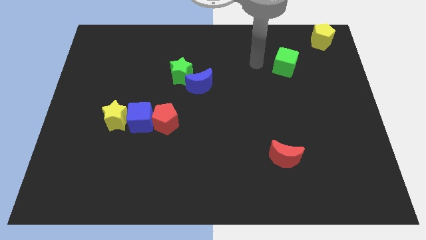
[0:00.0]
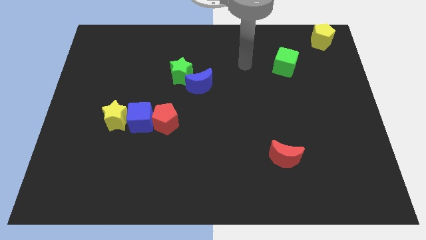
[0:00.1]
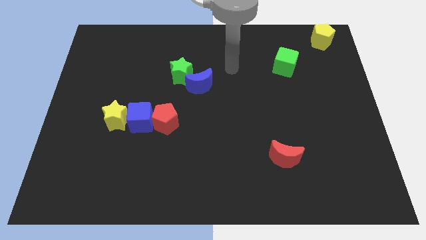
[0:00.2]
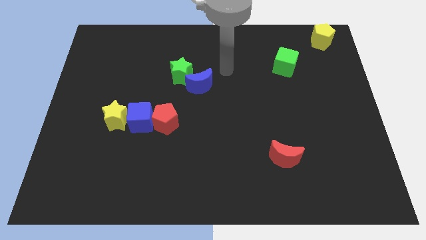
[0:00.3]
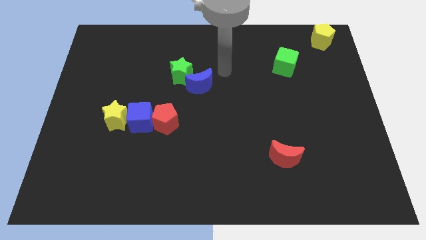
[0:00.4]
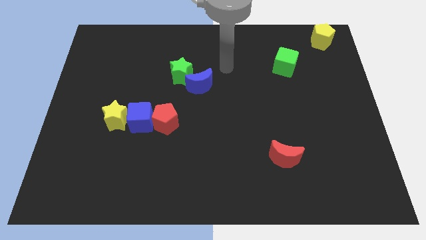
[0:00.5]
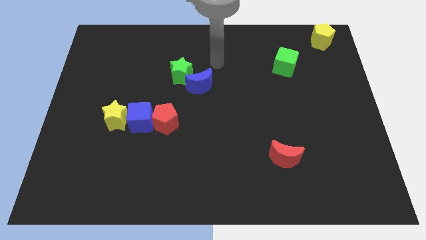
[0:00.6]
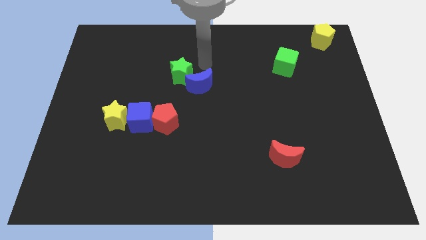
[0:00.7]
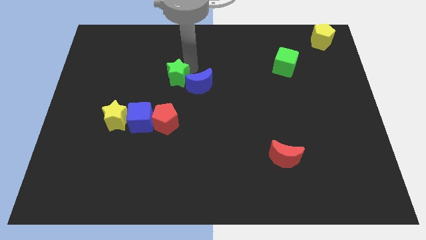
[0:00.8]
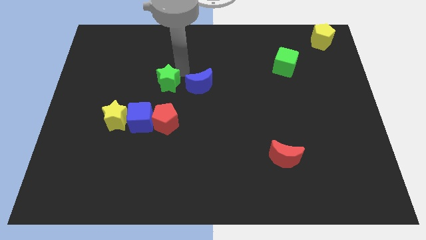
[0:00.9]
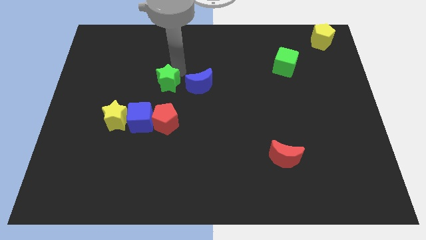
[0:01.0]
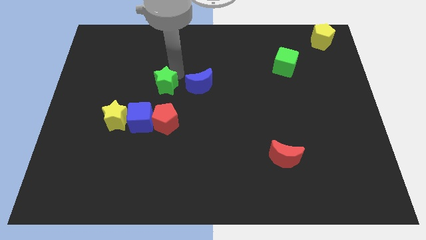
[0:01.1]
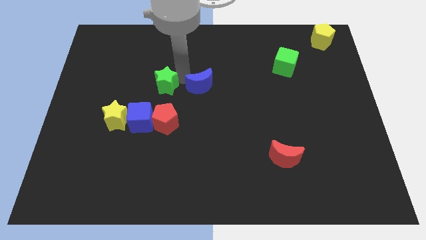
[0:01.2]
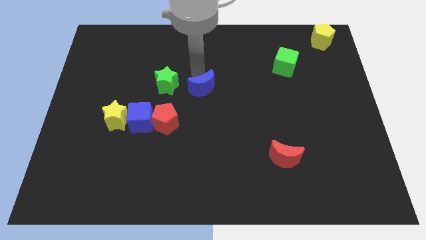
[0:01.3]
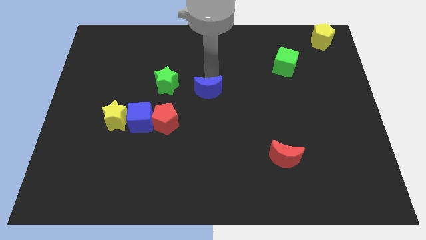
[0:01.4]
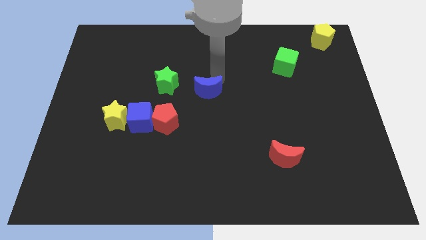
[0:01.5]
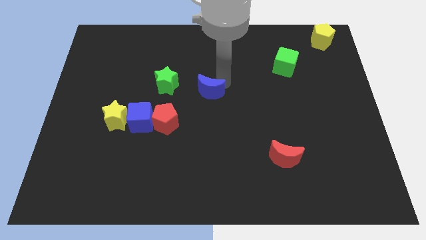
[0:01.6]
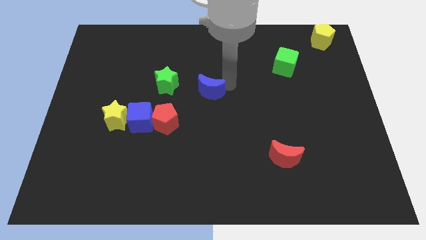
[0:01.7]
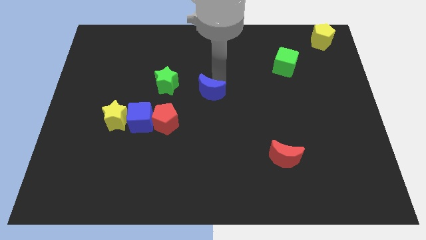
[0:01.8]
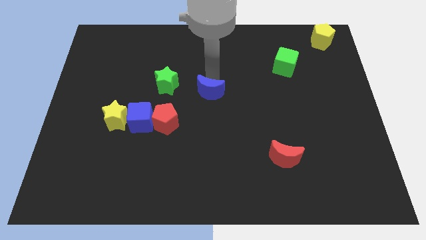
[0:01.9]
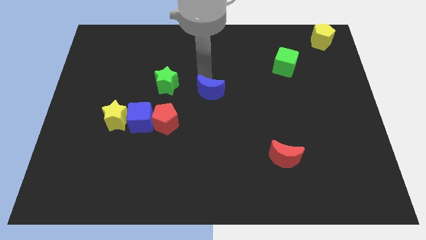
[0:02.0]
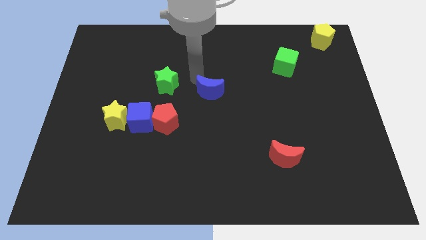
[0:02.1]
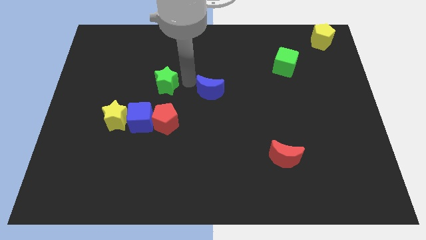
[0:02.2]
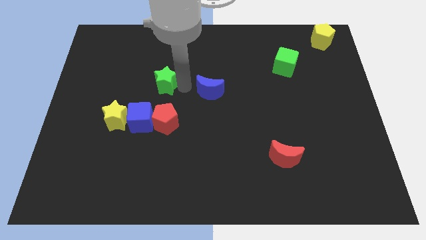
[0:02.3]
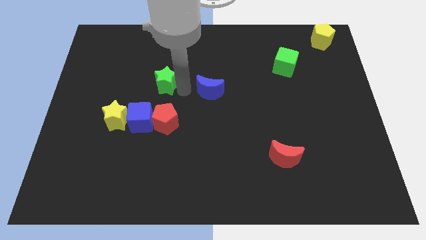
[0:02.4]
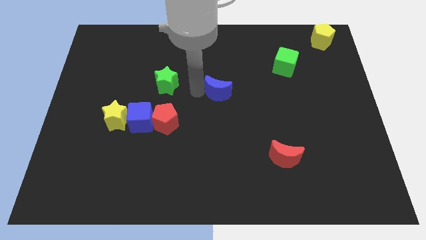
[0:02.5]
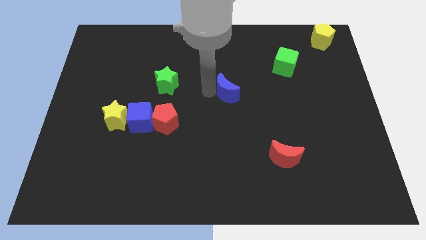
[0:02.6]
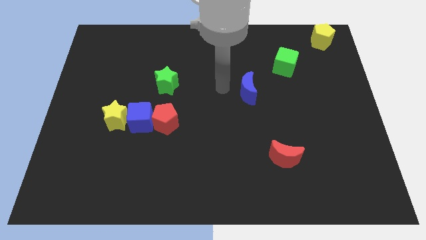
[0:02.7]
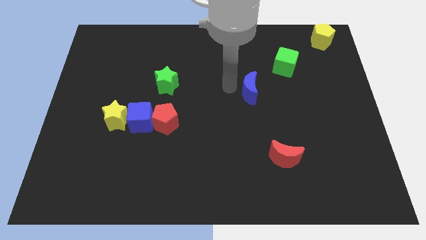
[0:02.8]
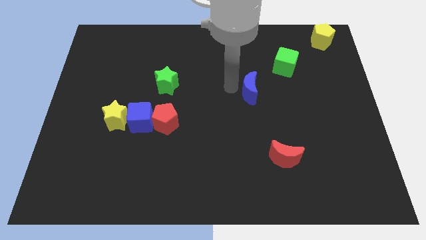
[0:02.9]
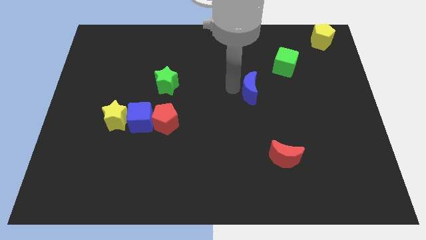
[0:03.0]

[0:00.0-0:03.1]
move green star and blue crescent apart

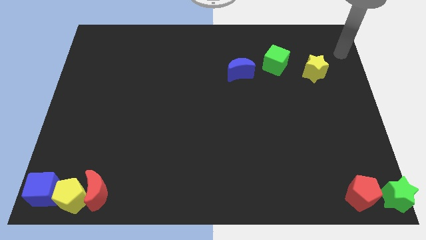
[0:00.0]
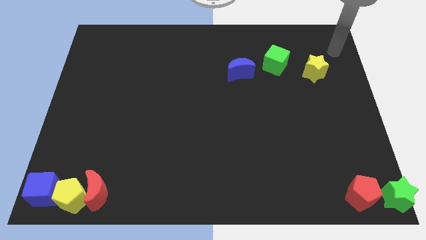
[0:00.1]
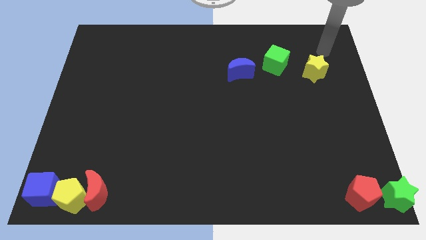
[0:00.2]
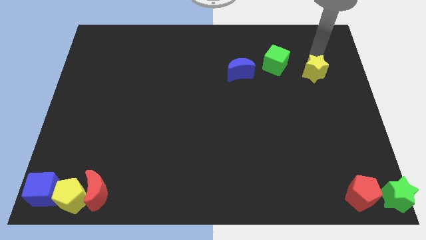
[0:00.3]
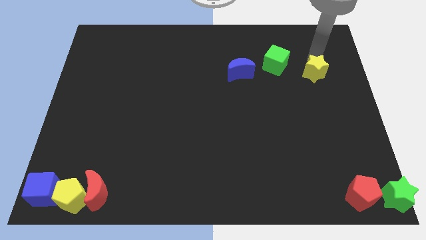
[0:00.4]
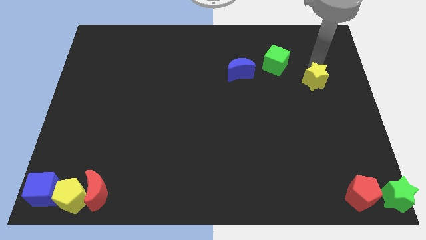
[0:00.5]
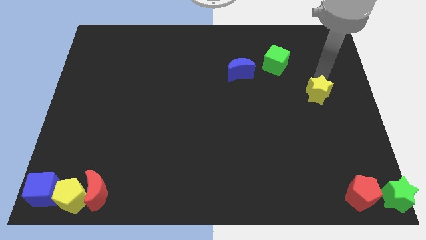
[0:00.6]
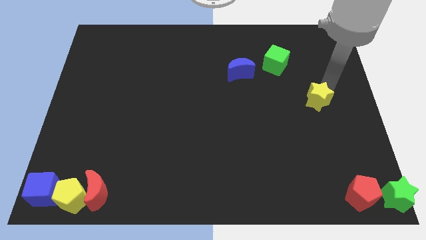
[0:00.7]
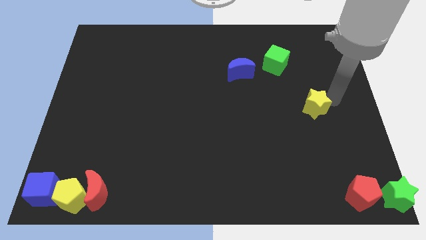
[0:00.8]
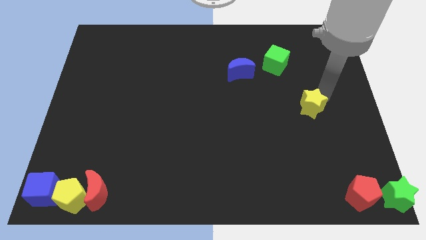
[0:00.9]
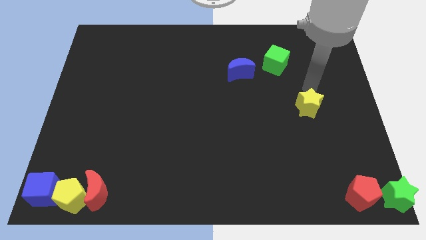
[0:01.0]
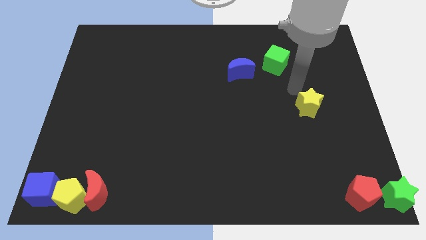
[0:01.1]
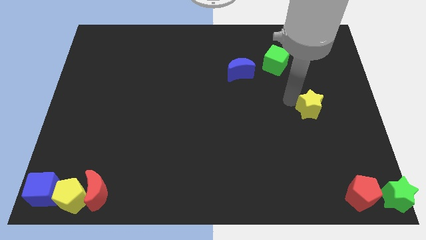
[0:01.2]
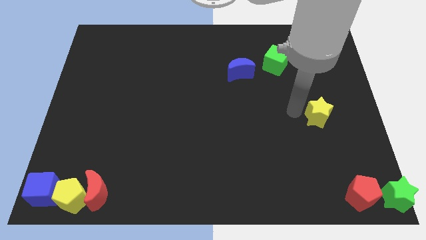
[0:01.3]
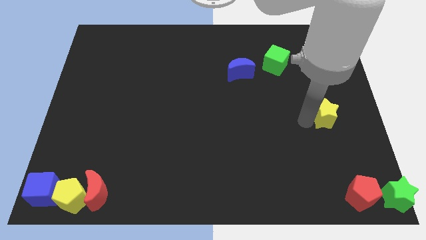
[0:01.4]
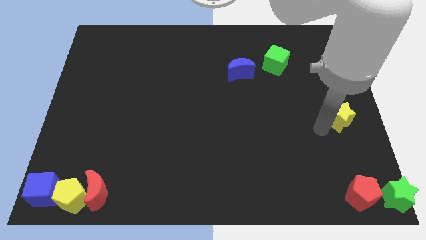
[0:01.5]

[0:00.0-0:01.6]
push the yellow star towards down

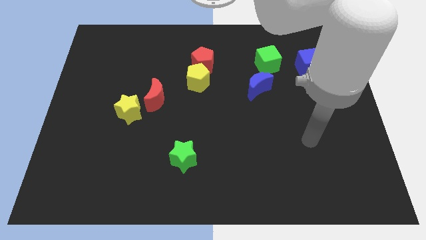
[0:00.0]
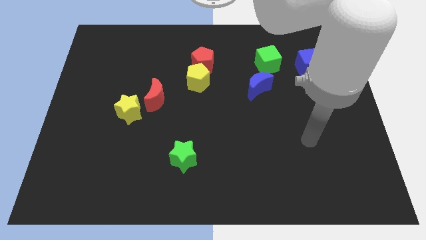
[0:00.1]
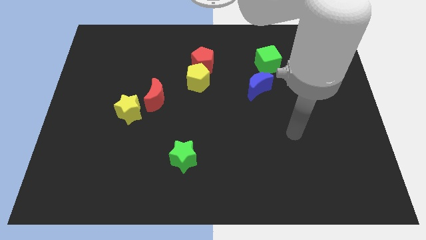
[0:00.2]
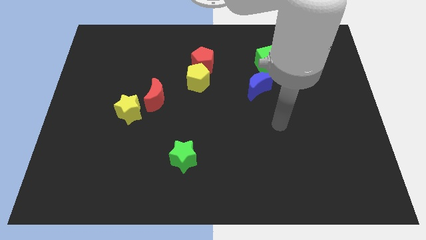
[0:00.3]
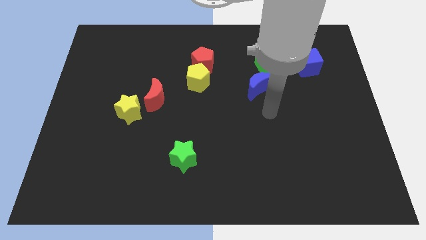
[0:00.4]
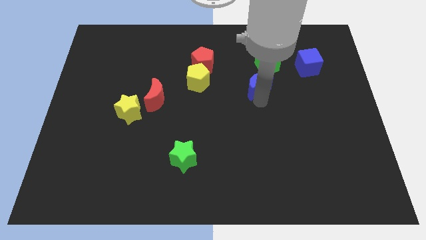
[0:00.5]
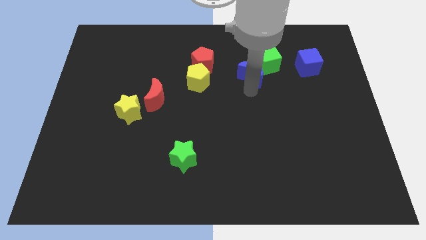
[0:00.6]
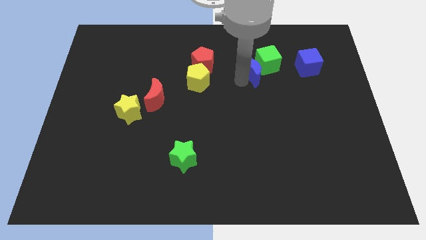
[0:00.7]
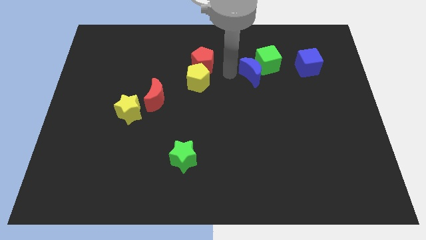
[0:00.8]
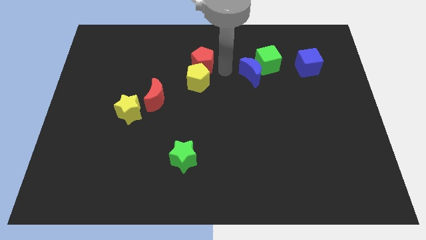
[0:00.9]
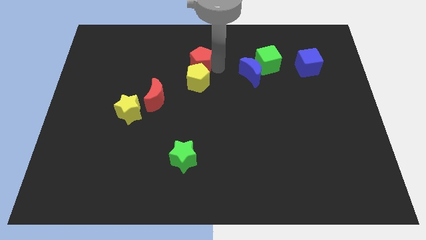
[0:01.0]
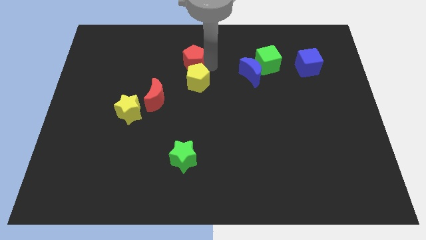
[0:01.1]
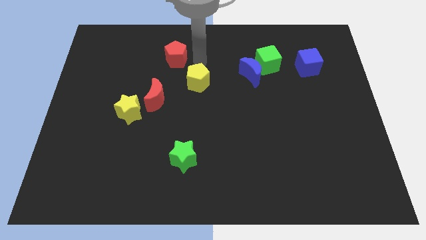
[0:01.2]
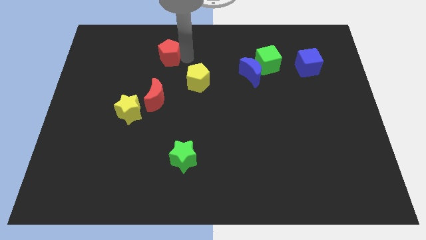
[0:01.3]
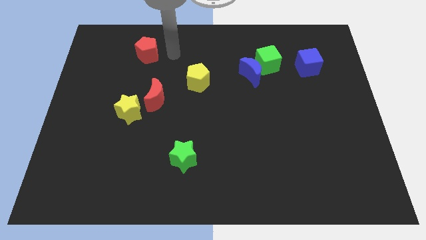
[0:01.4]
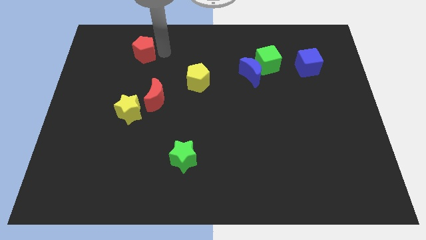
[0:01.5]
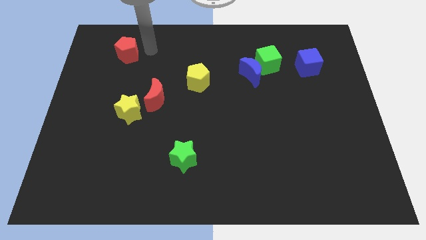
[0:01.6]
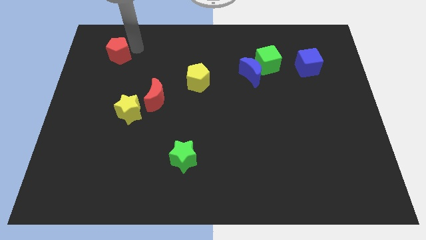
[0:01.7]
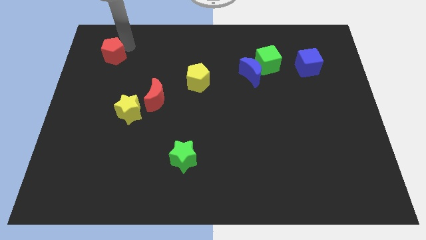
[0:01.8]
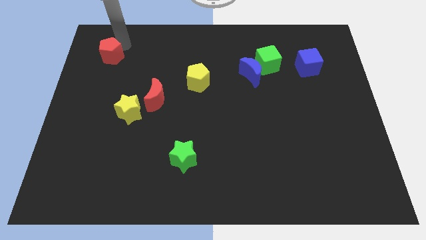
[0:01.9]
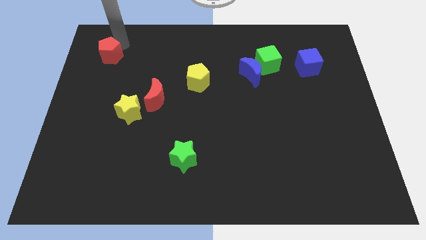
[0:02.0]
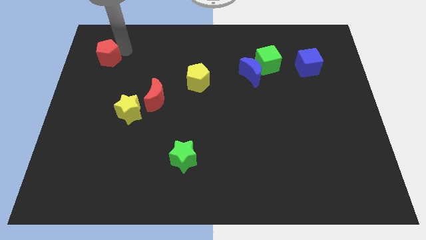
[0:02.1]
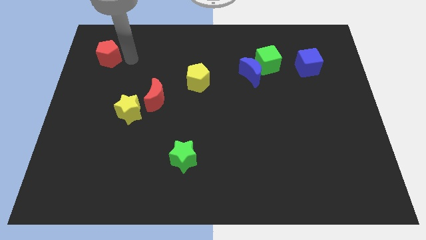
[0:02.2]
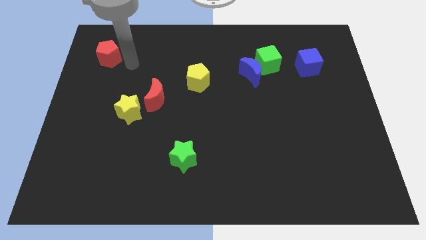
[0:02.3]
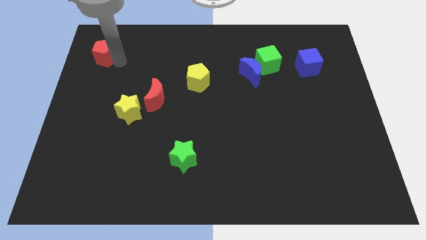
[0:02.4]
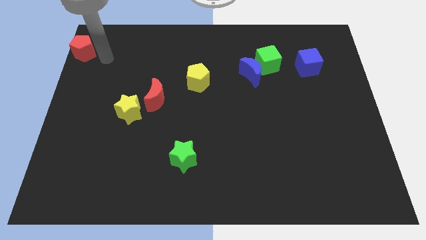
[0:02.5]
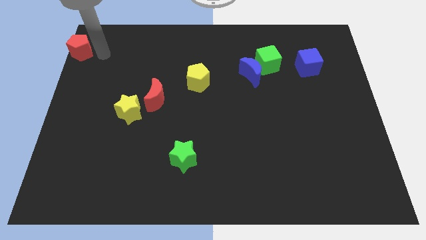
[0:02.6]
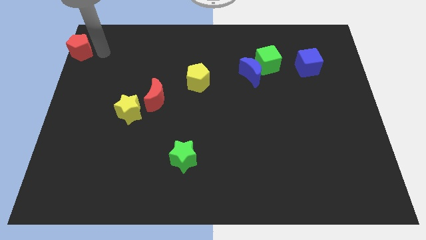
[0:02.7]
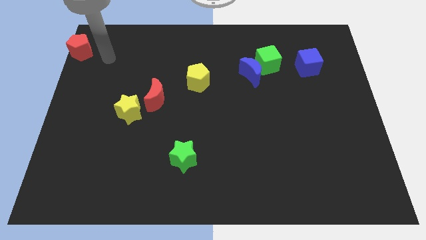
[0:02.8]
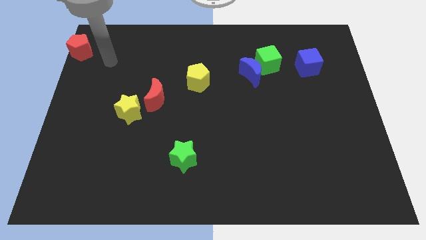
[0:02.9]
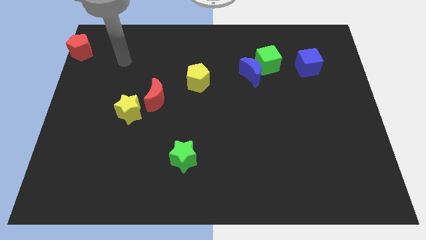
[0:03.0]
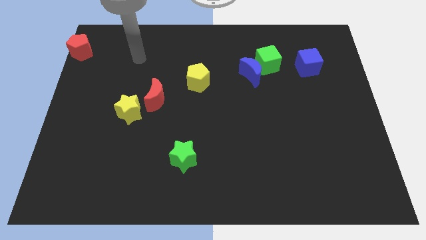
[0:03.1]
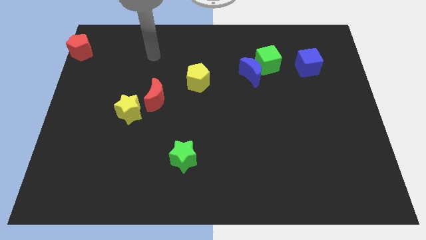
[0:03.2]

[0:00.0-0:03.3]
move the red pentagon to the top left

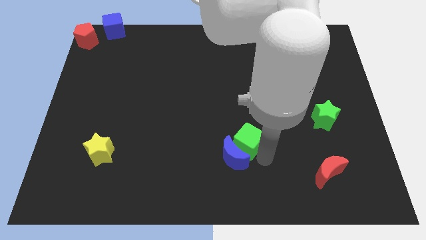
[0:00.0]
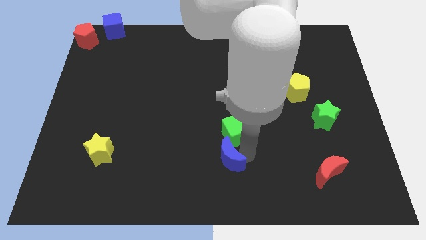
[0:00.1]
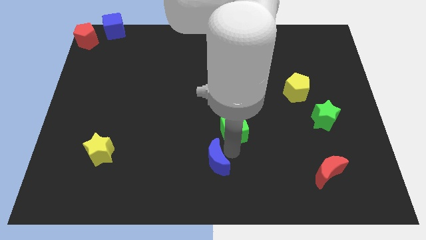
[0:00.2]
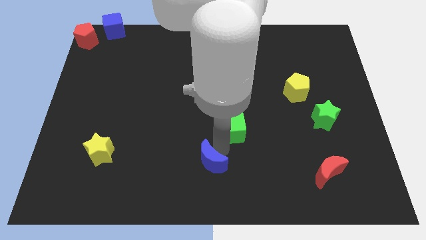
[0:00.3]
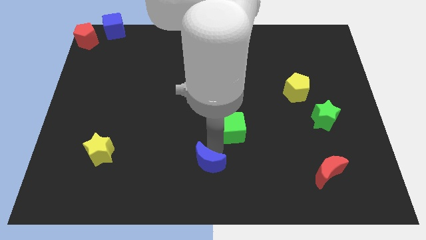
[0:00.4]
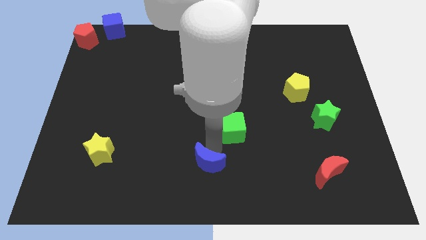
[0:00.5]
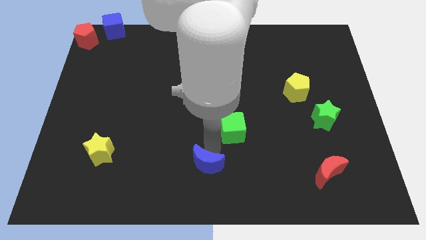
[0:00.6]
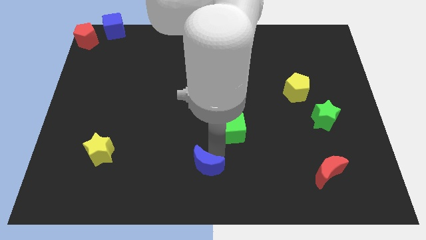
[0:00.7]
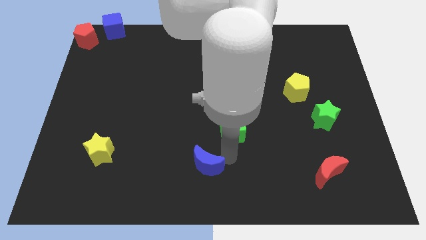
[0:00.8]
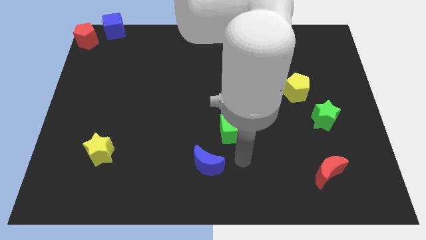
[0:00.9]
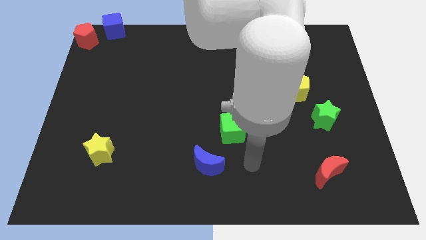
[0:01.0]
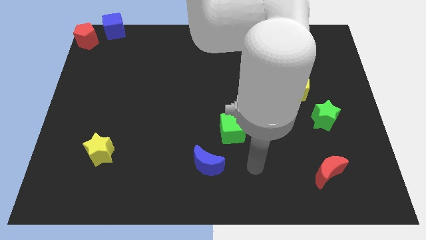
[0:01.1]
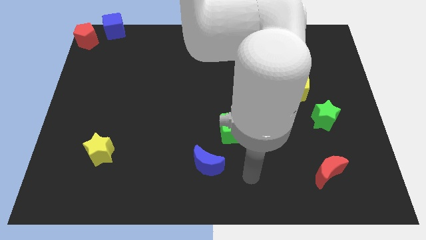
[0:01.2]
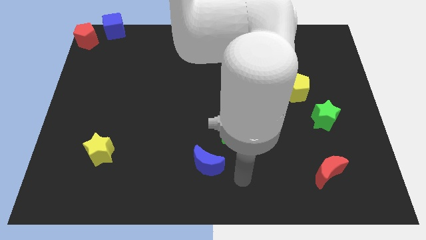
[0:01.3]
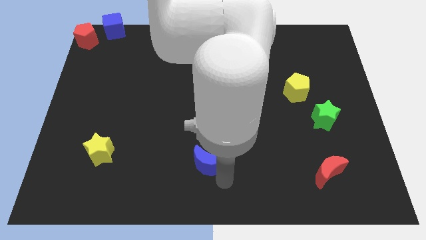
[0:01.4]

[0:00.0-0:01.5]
separate blue crescent from green cube
